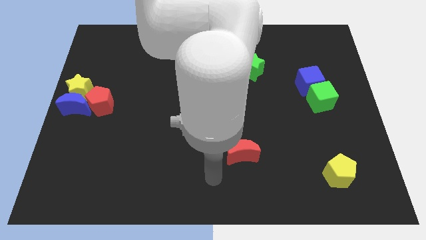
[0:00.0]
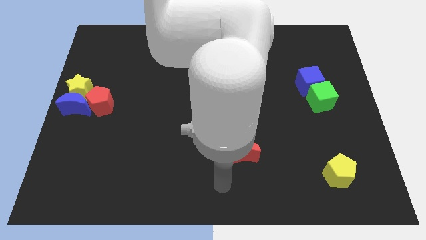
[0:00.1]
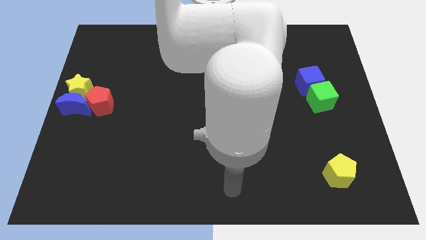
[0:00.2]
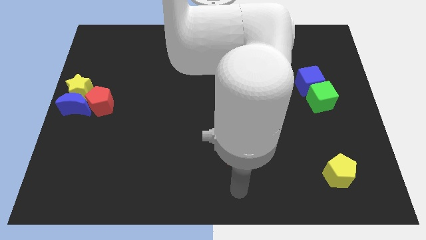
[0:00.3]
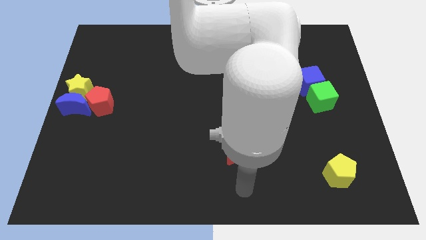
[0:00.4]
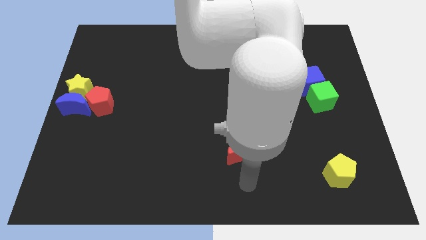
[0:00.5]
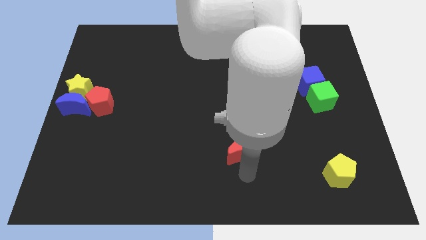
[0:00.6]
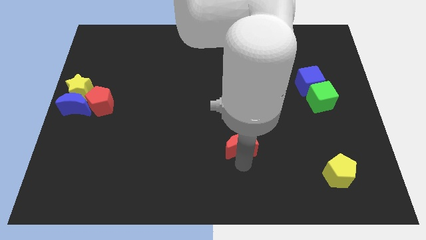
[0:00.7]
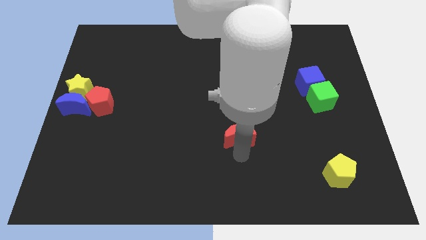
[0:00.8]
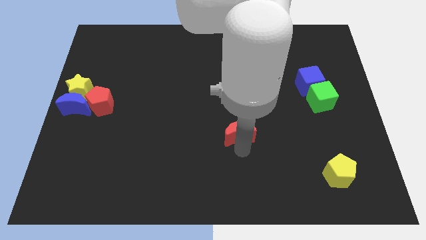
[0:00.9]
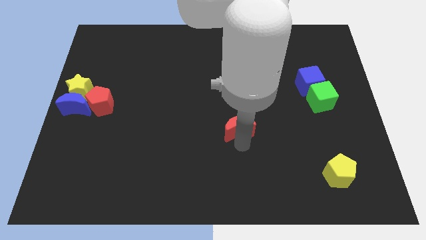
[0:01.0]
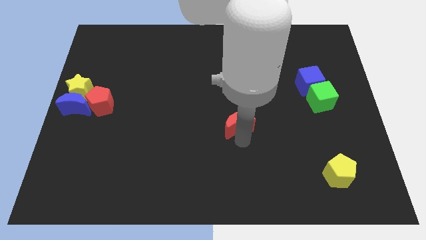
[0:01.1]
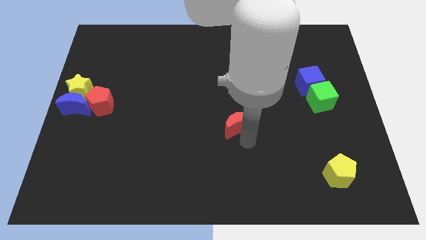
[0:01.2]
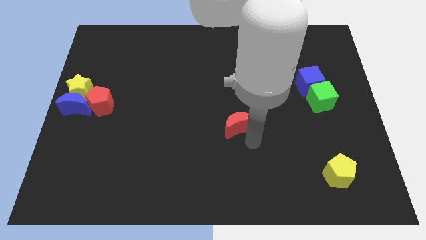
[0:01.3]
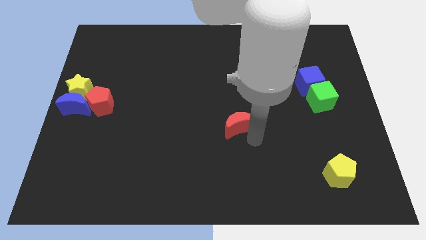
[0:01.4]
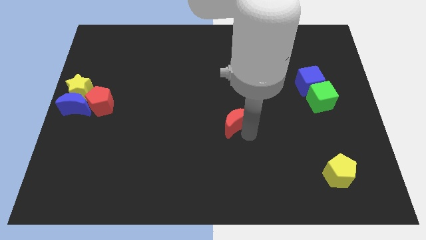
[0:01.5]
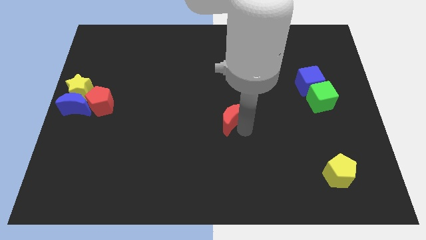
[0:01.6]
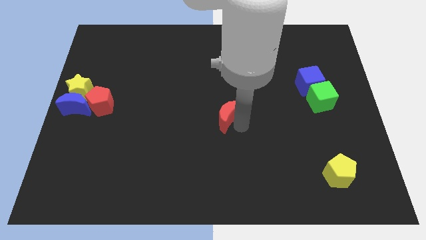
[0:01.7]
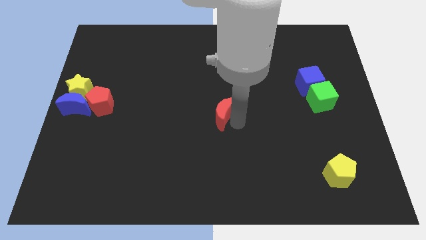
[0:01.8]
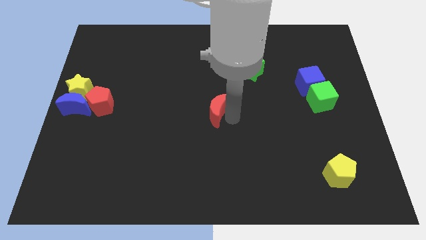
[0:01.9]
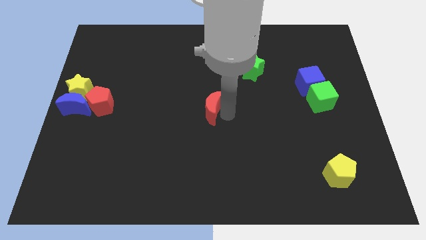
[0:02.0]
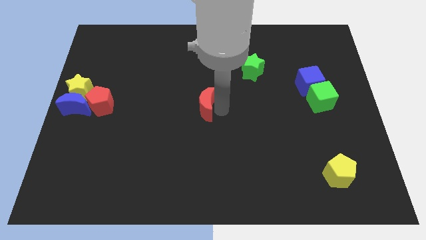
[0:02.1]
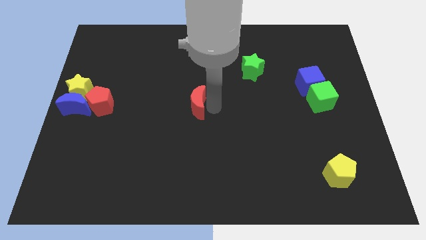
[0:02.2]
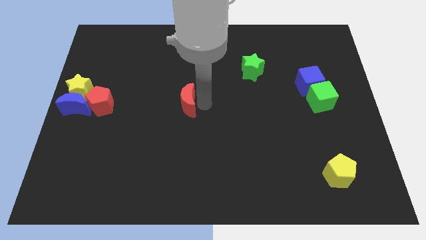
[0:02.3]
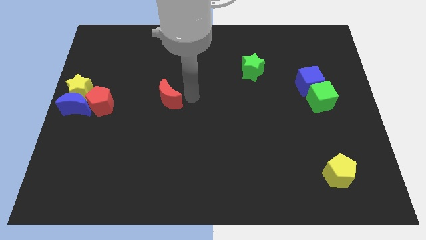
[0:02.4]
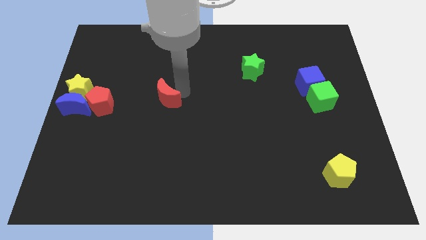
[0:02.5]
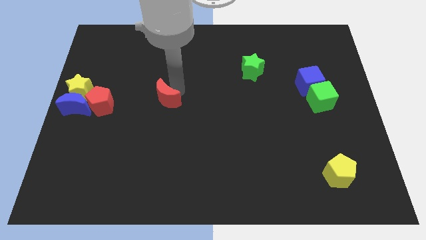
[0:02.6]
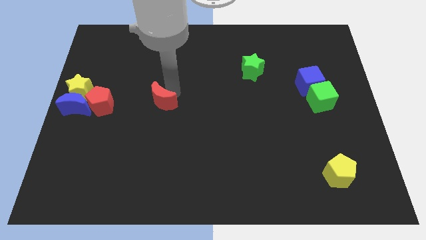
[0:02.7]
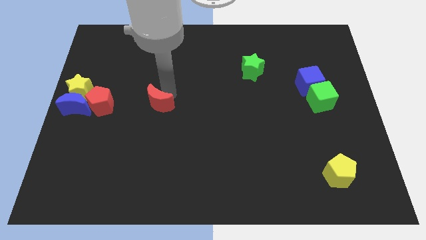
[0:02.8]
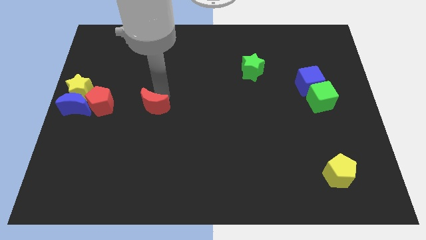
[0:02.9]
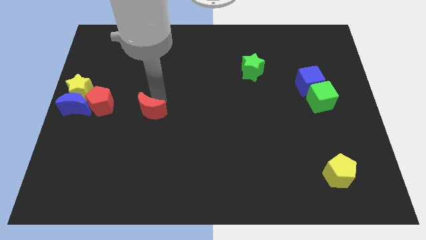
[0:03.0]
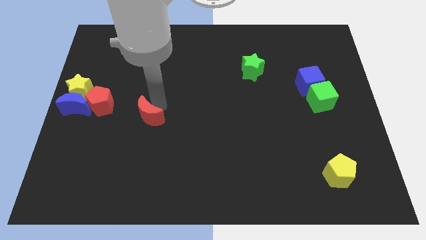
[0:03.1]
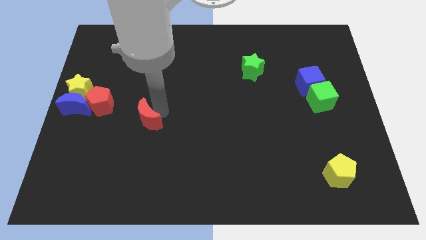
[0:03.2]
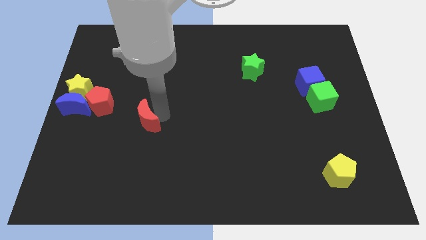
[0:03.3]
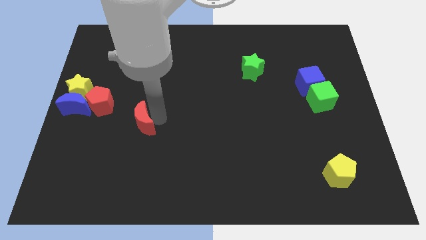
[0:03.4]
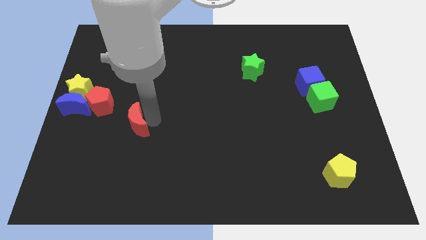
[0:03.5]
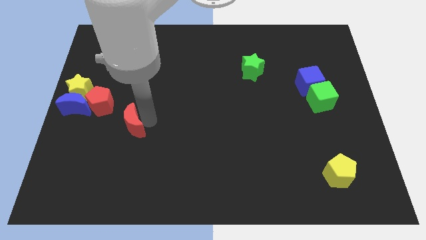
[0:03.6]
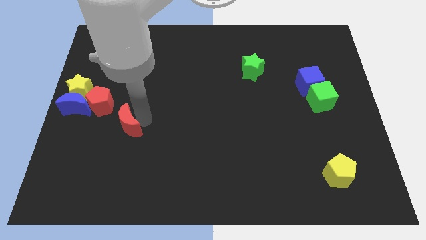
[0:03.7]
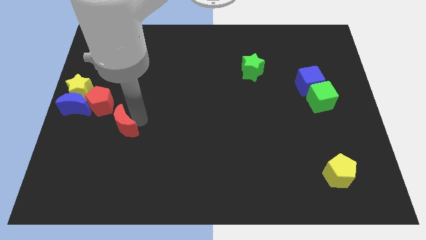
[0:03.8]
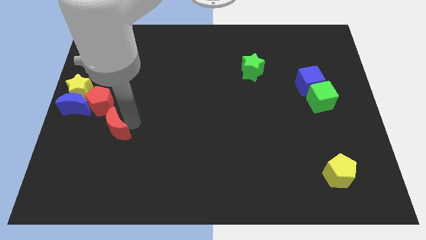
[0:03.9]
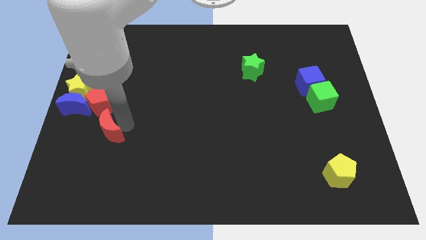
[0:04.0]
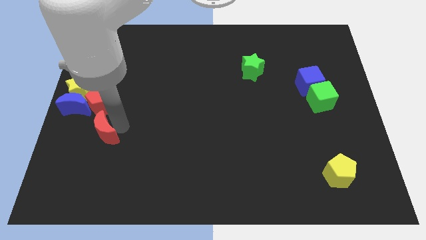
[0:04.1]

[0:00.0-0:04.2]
push the red moon underneath the red pentagon

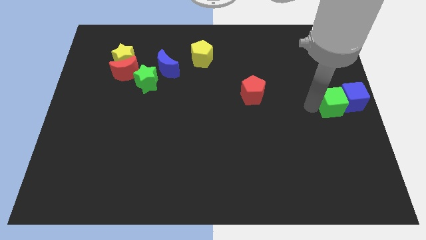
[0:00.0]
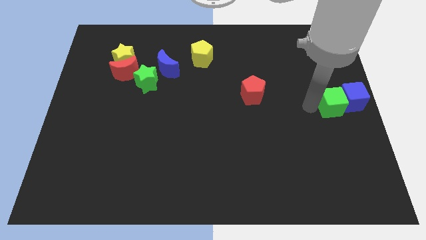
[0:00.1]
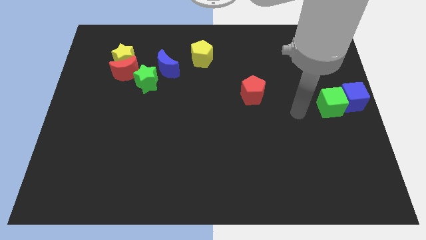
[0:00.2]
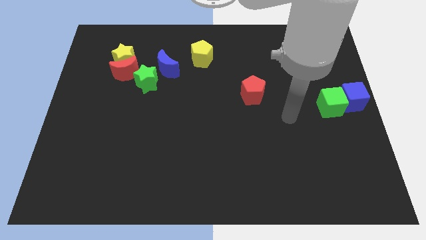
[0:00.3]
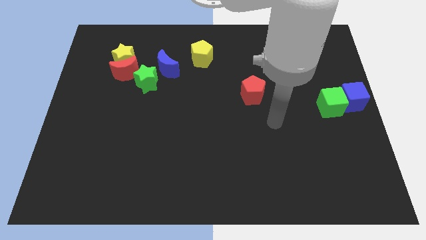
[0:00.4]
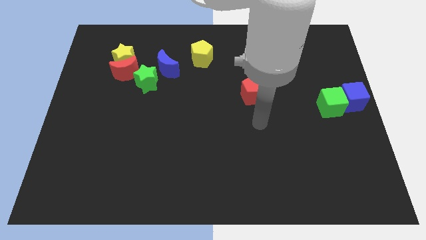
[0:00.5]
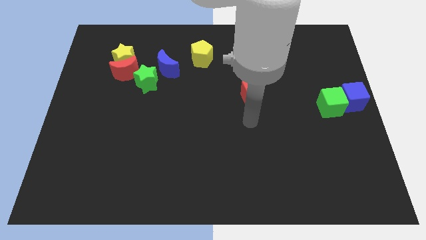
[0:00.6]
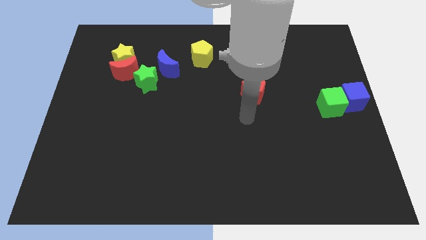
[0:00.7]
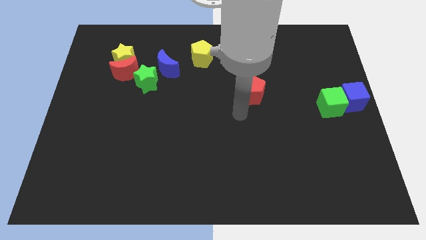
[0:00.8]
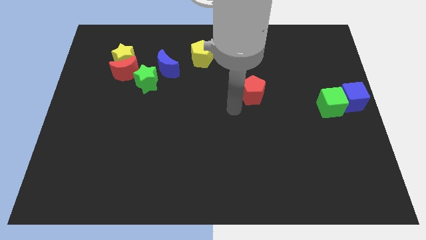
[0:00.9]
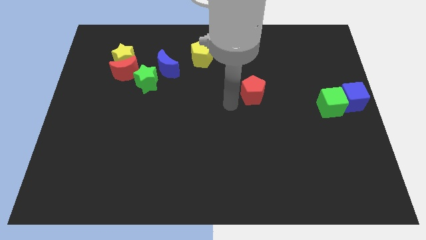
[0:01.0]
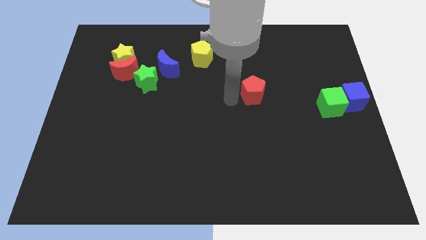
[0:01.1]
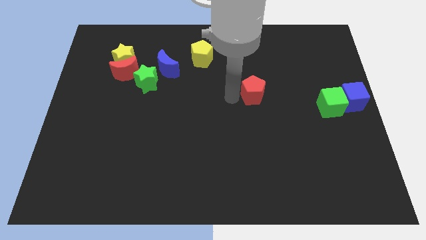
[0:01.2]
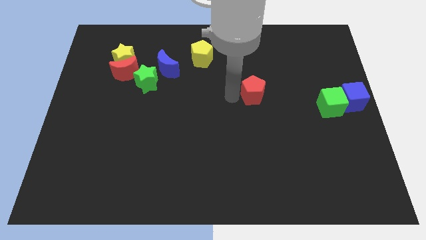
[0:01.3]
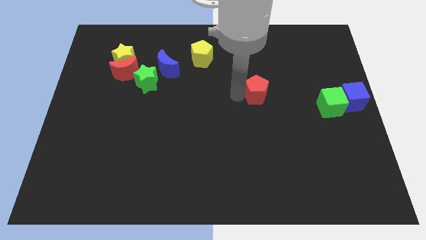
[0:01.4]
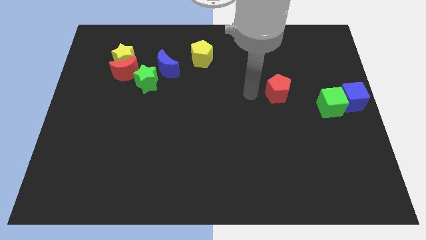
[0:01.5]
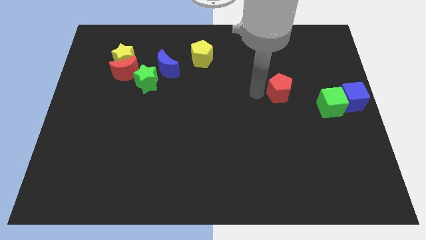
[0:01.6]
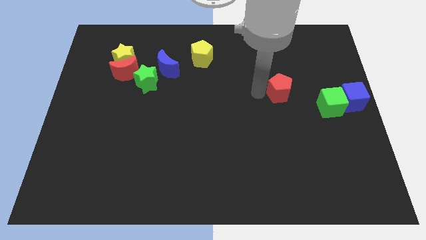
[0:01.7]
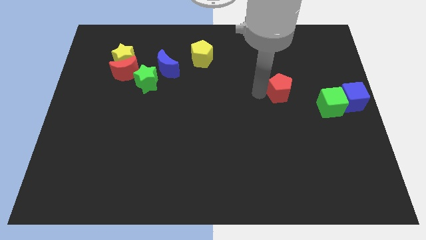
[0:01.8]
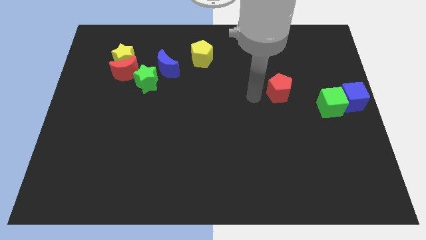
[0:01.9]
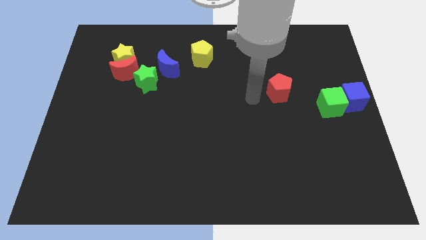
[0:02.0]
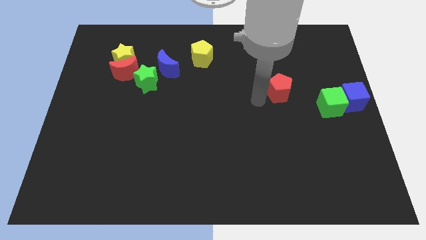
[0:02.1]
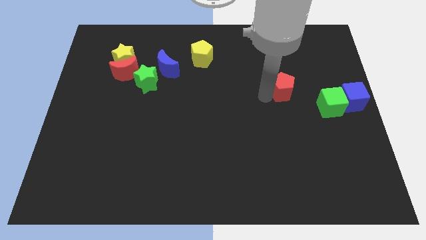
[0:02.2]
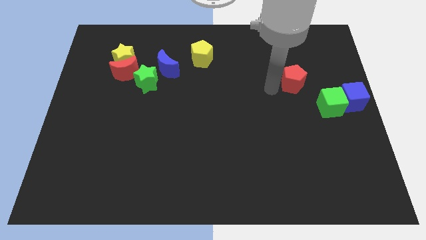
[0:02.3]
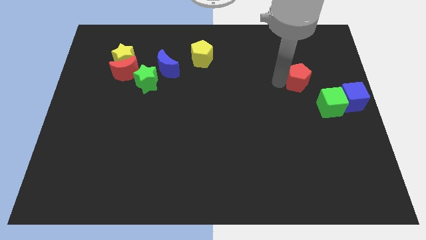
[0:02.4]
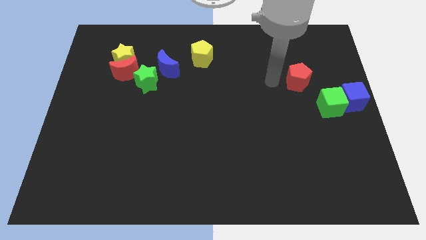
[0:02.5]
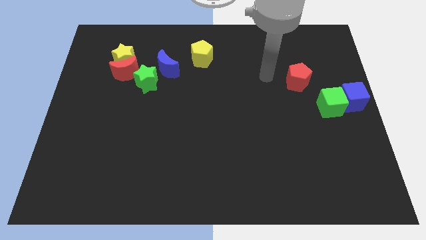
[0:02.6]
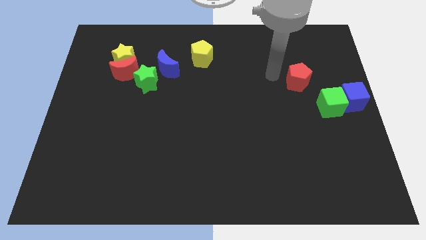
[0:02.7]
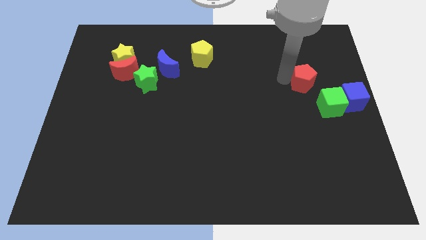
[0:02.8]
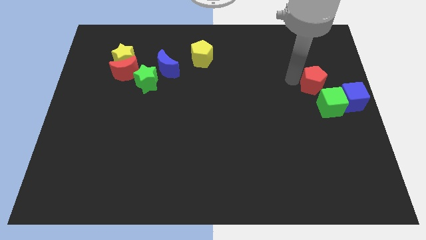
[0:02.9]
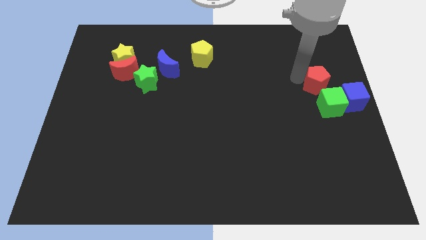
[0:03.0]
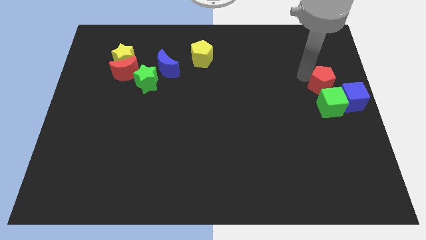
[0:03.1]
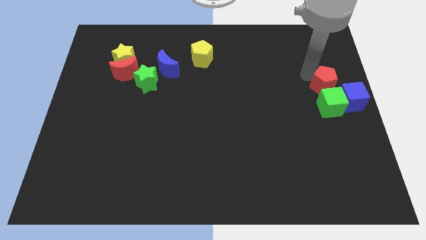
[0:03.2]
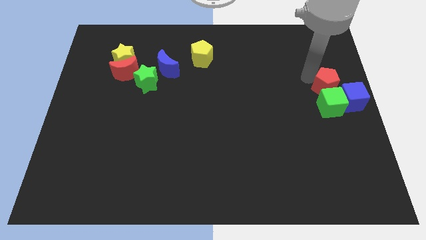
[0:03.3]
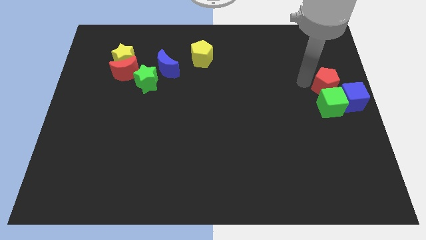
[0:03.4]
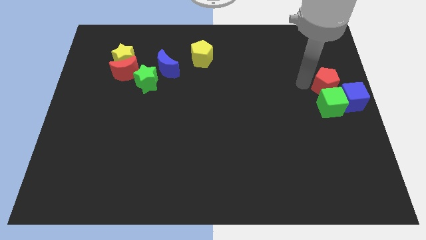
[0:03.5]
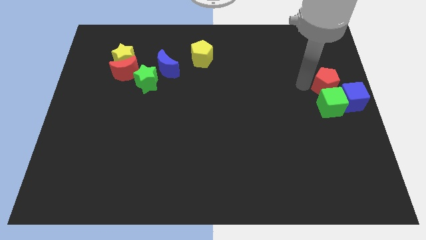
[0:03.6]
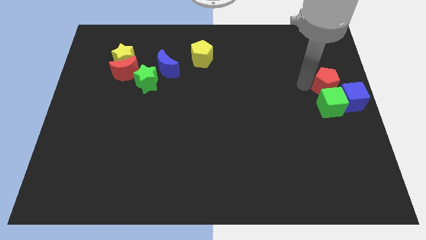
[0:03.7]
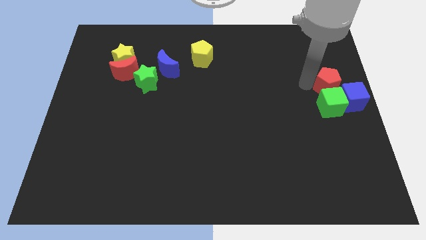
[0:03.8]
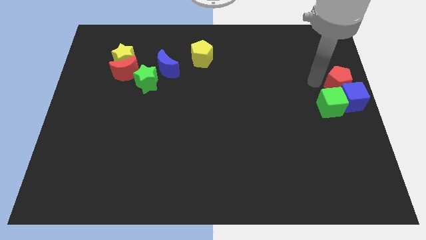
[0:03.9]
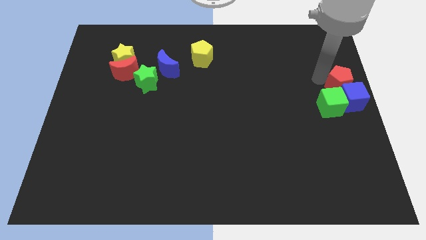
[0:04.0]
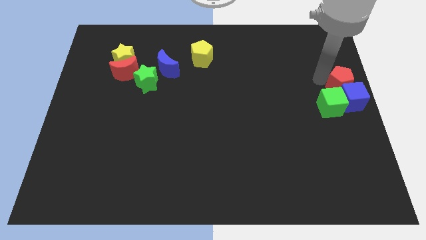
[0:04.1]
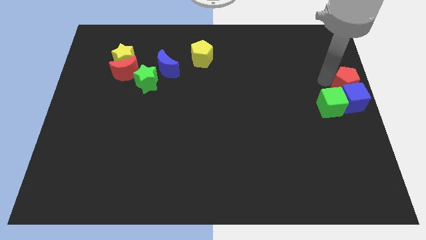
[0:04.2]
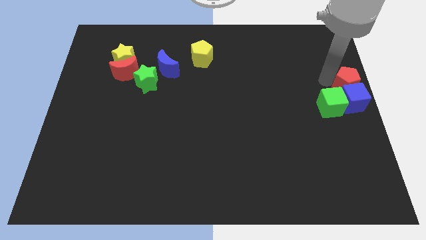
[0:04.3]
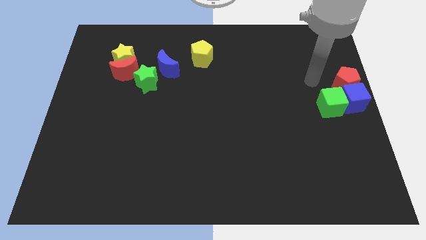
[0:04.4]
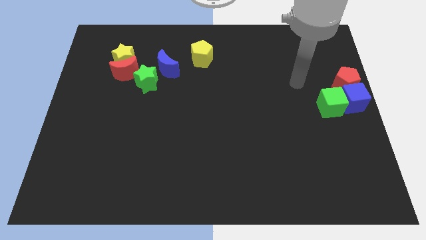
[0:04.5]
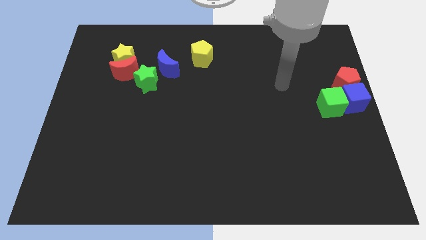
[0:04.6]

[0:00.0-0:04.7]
place the red pentagon to the top of blue cube
